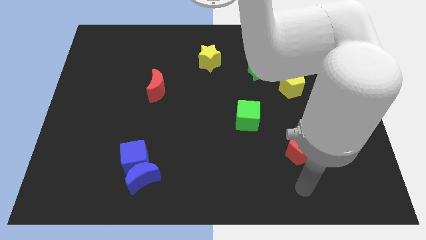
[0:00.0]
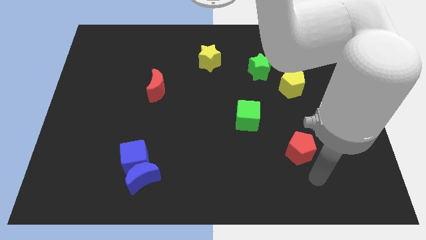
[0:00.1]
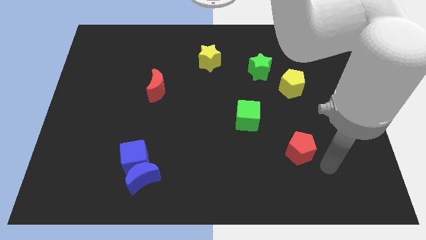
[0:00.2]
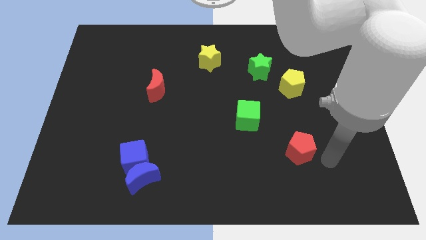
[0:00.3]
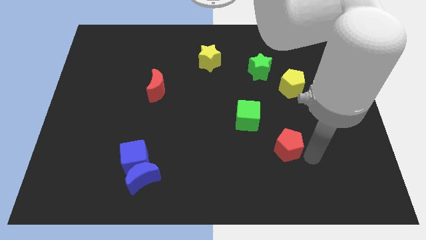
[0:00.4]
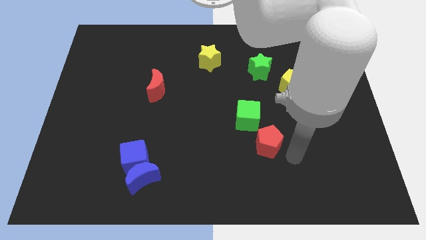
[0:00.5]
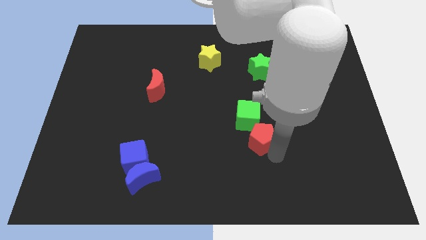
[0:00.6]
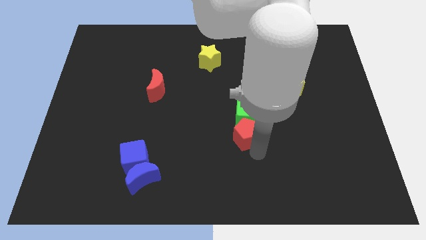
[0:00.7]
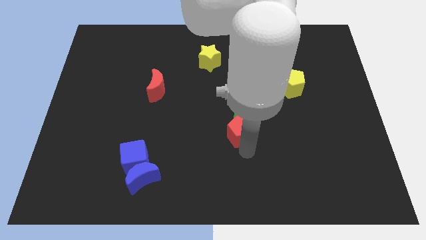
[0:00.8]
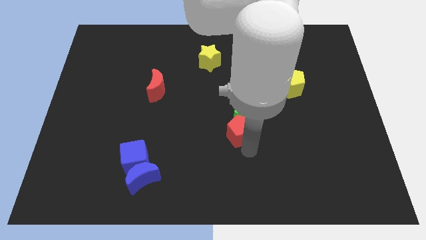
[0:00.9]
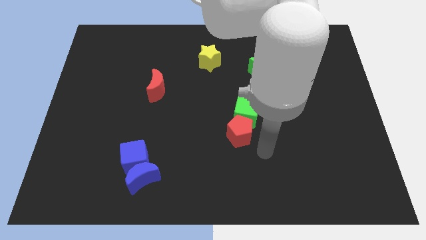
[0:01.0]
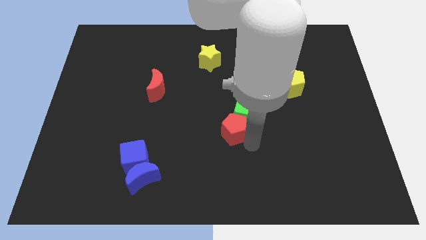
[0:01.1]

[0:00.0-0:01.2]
place the red pentagon below the green cube

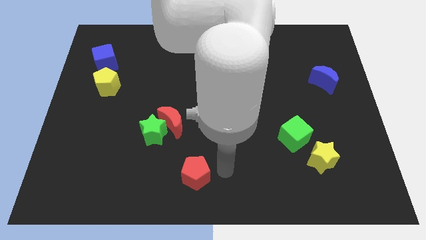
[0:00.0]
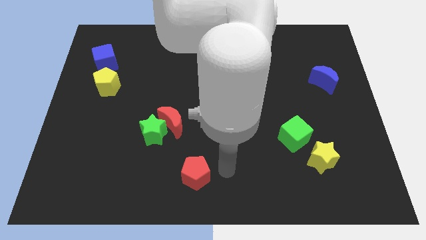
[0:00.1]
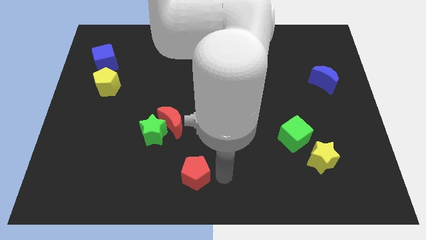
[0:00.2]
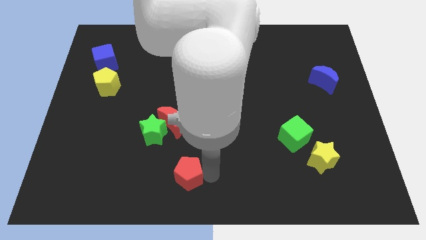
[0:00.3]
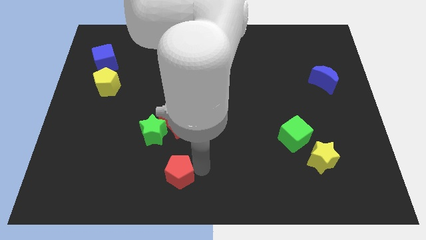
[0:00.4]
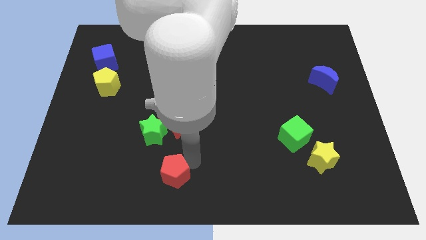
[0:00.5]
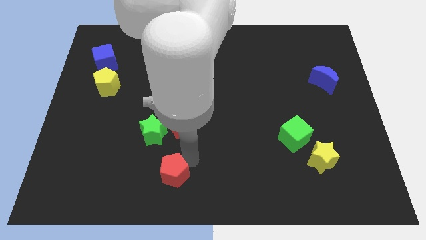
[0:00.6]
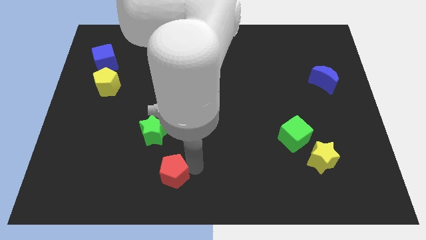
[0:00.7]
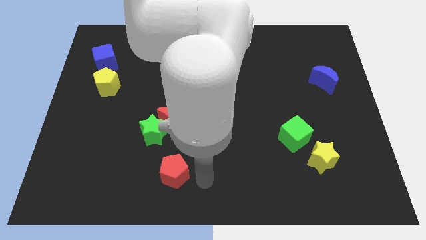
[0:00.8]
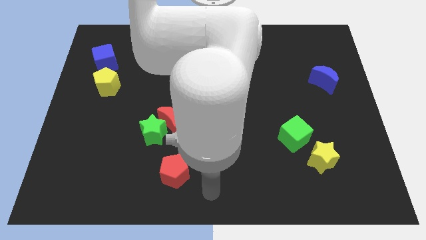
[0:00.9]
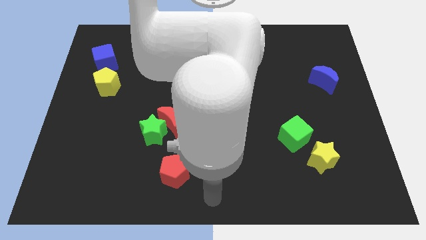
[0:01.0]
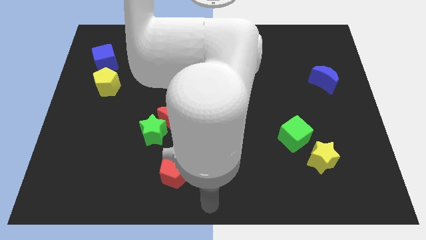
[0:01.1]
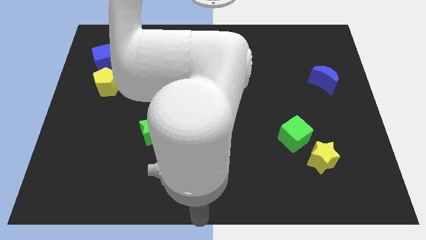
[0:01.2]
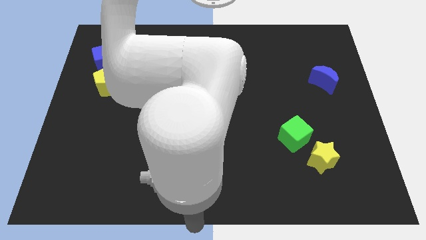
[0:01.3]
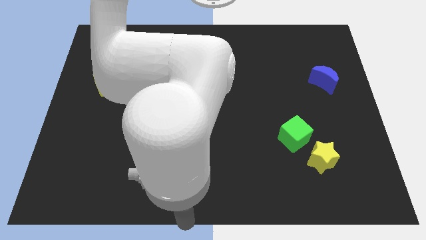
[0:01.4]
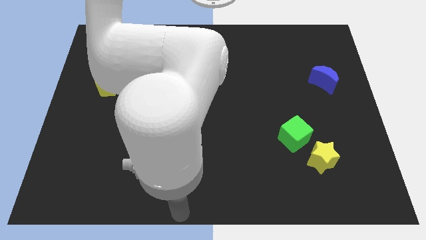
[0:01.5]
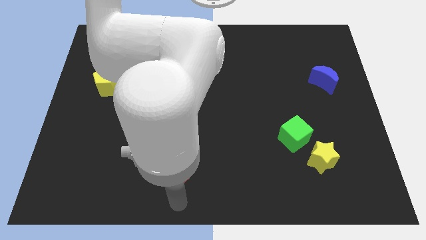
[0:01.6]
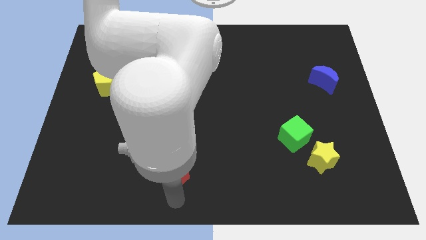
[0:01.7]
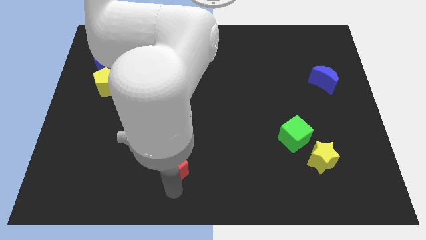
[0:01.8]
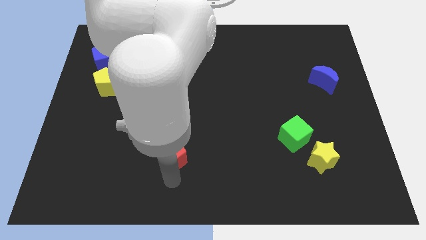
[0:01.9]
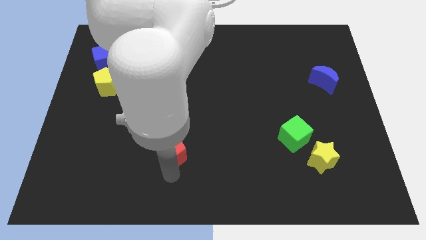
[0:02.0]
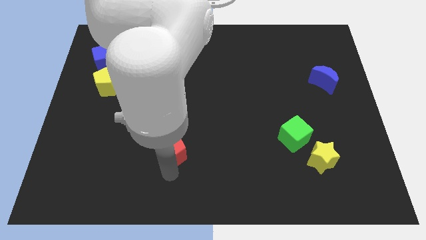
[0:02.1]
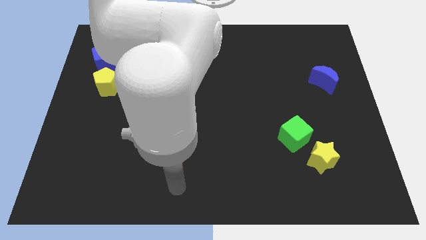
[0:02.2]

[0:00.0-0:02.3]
push the red pentagon to the bottom of the red crescent

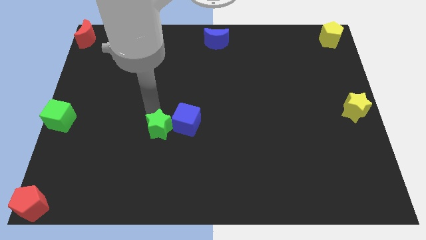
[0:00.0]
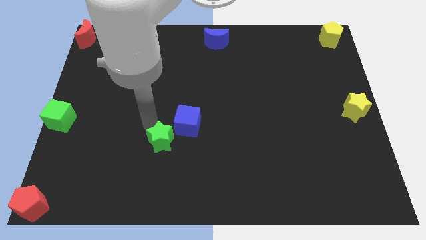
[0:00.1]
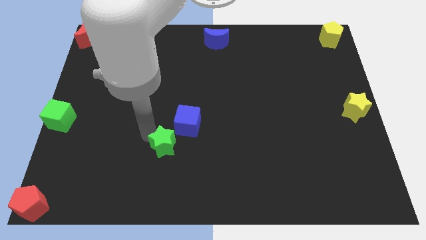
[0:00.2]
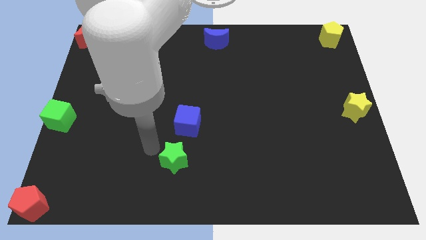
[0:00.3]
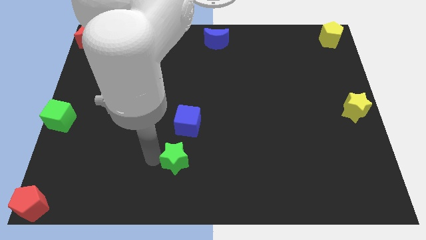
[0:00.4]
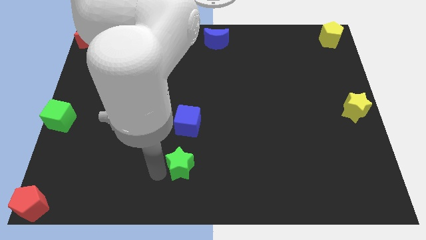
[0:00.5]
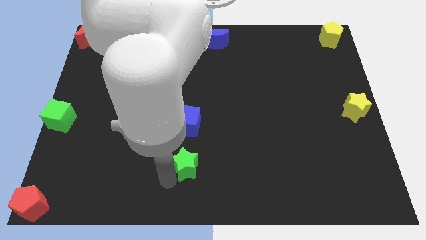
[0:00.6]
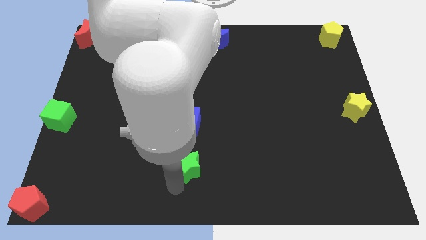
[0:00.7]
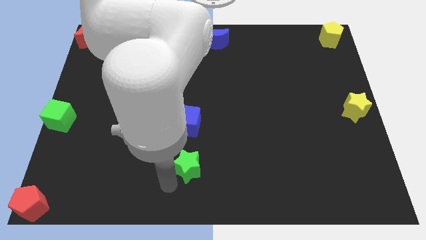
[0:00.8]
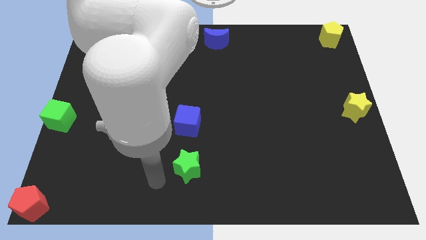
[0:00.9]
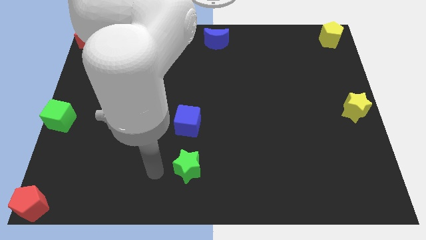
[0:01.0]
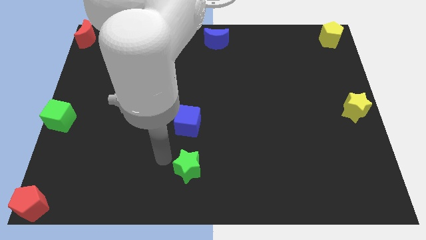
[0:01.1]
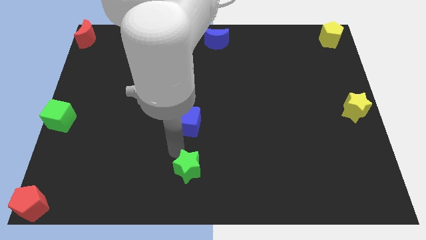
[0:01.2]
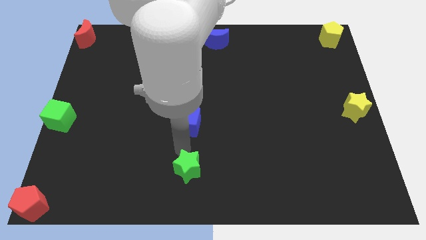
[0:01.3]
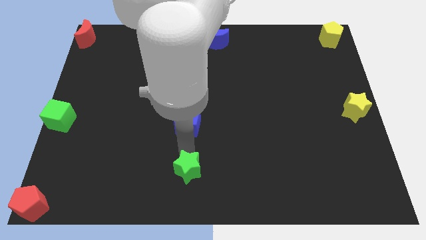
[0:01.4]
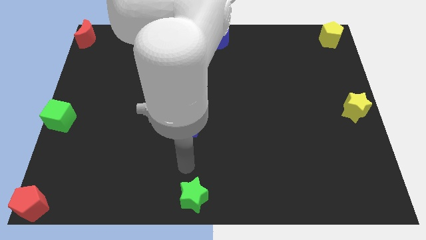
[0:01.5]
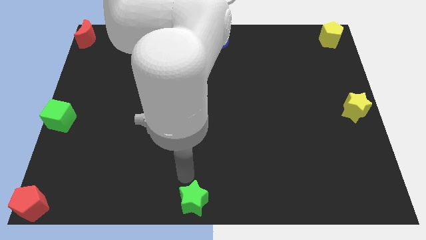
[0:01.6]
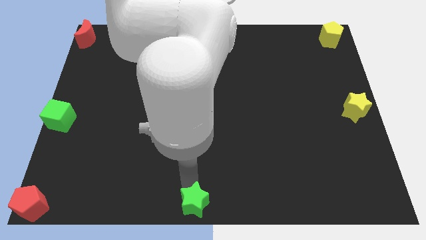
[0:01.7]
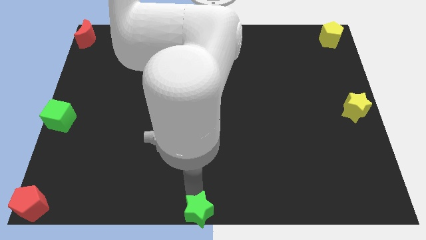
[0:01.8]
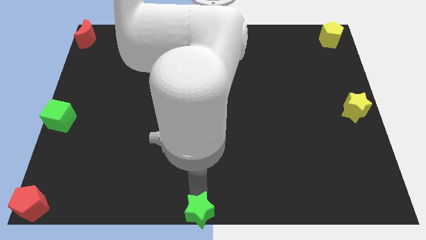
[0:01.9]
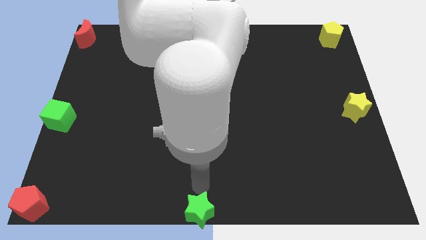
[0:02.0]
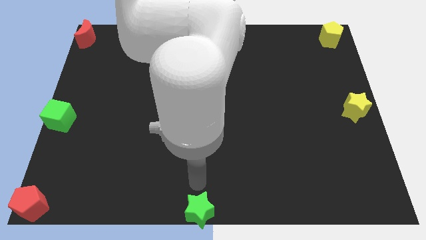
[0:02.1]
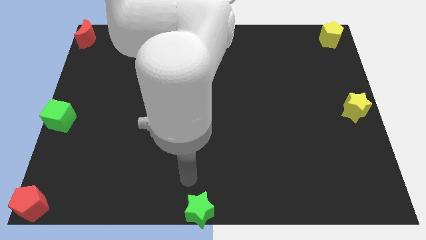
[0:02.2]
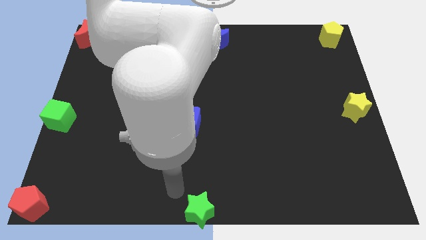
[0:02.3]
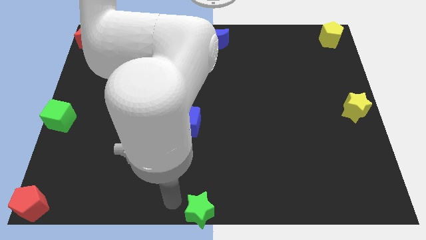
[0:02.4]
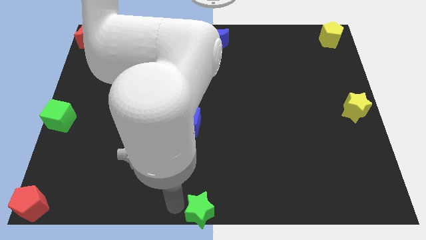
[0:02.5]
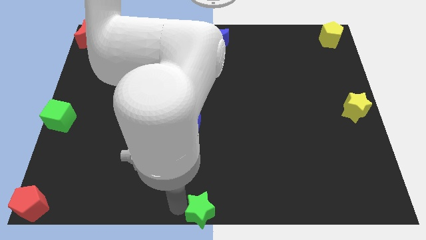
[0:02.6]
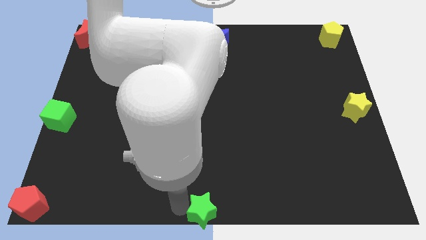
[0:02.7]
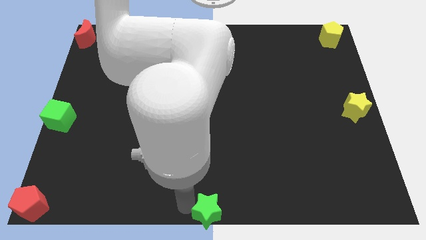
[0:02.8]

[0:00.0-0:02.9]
place the green star to the bottom center of the board

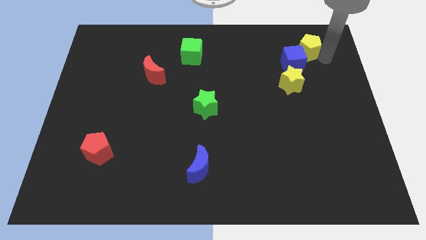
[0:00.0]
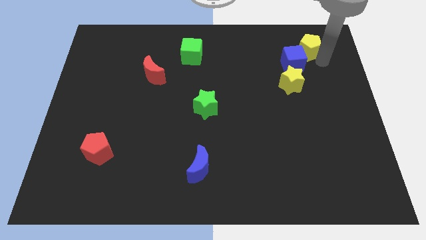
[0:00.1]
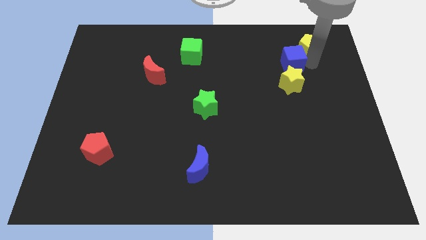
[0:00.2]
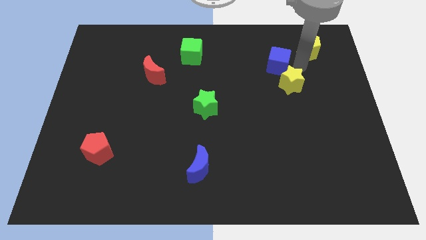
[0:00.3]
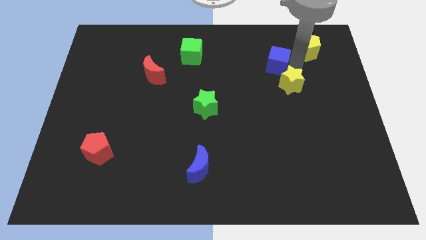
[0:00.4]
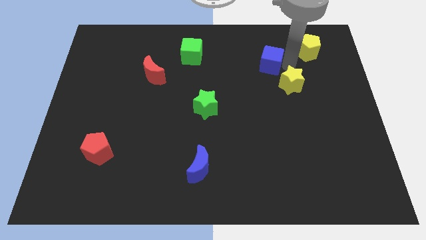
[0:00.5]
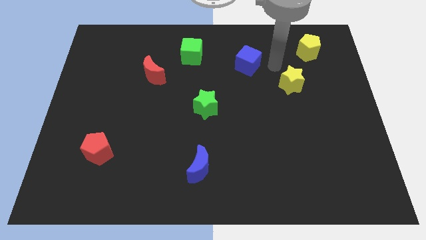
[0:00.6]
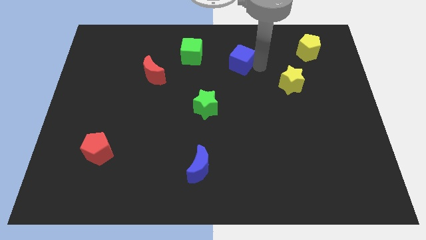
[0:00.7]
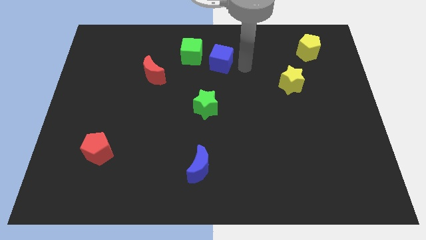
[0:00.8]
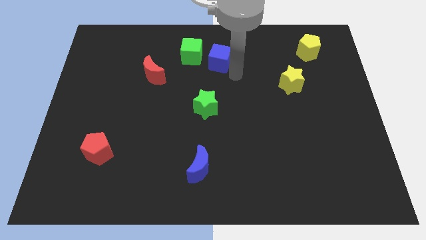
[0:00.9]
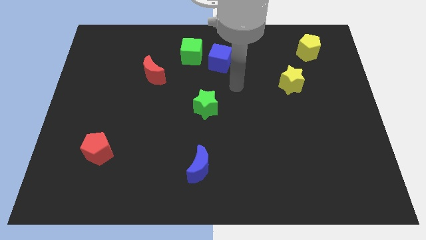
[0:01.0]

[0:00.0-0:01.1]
separate blue cube from yellow blocks

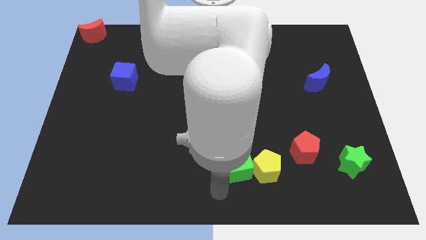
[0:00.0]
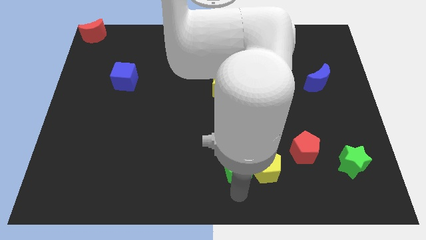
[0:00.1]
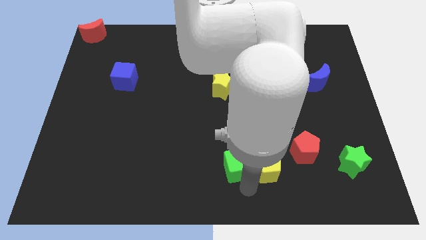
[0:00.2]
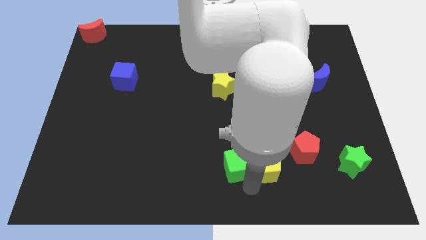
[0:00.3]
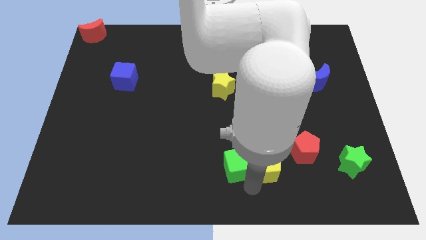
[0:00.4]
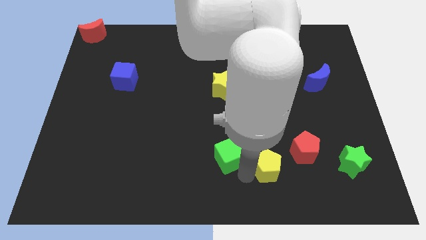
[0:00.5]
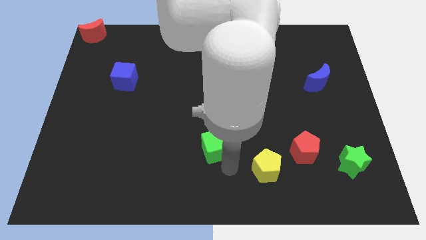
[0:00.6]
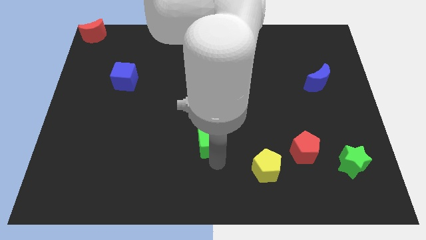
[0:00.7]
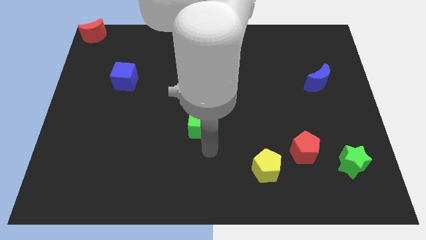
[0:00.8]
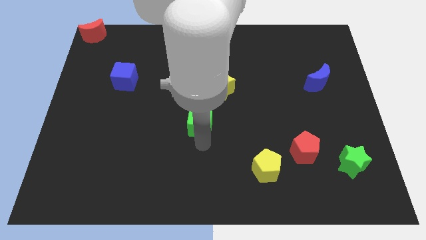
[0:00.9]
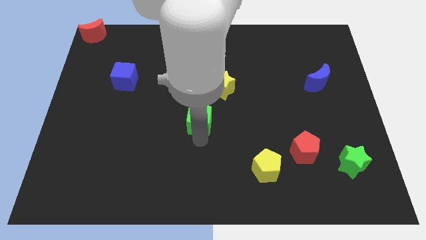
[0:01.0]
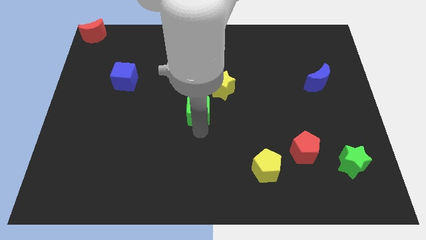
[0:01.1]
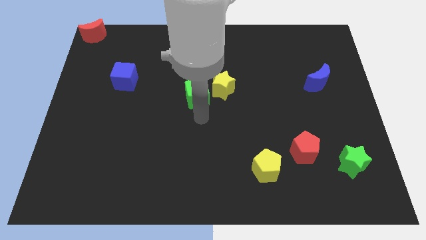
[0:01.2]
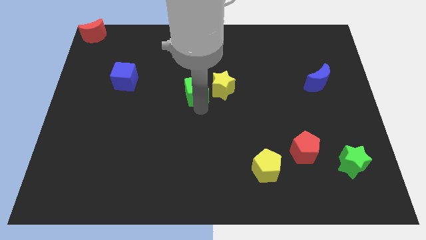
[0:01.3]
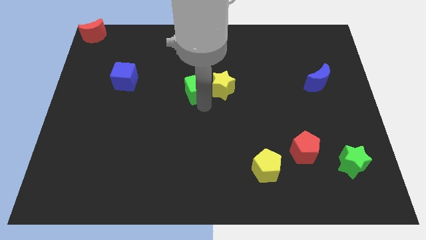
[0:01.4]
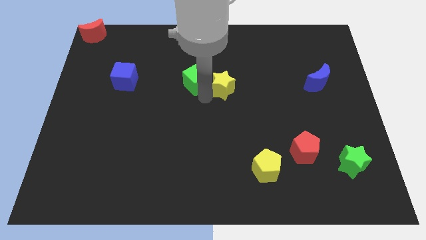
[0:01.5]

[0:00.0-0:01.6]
place the green cube to the left side of the yellow star
